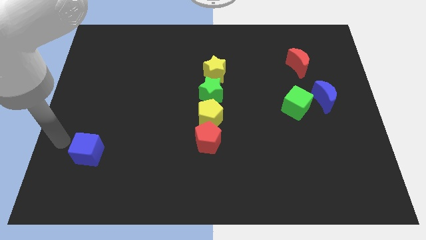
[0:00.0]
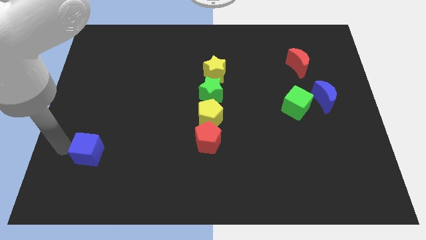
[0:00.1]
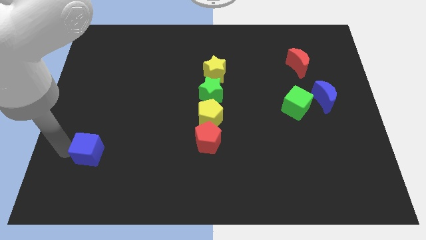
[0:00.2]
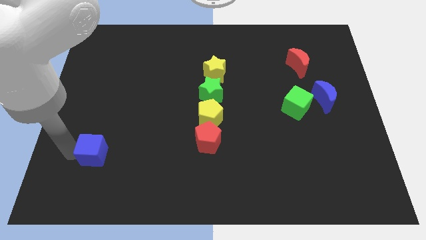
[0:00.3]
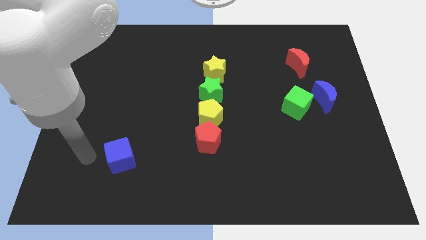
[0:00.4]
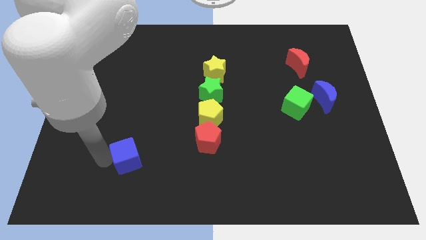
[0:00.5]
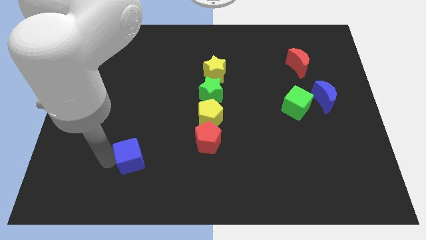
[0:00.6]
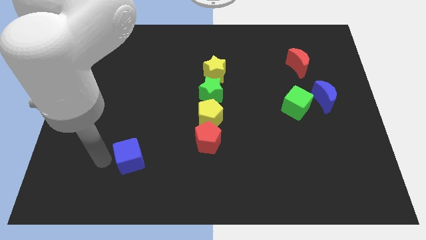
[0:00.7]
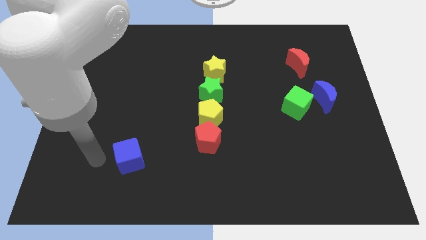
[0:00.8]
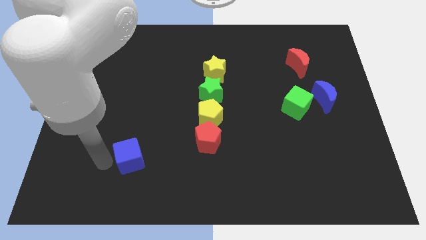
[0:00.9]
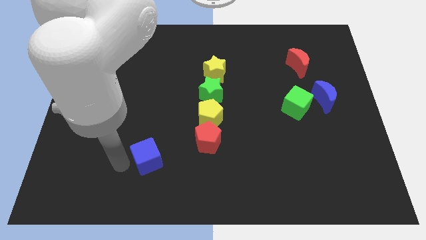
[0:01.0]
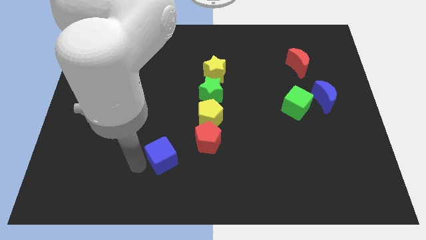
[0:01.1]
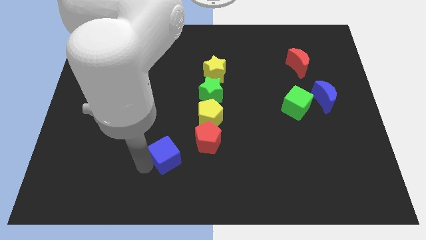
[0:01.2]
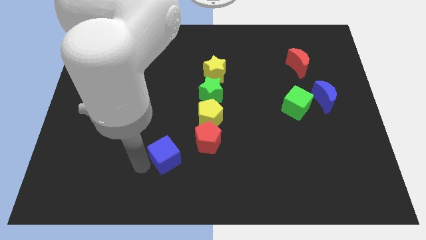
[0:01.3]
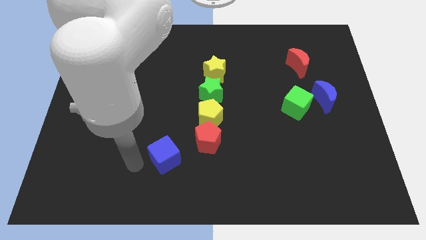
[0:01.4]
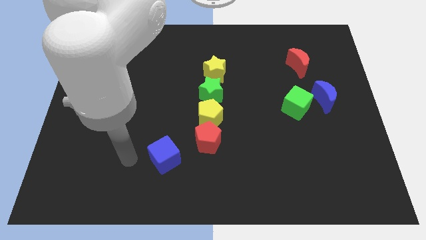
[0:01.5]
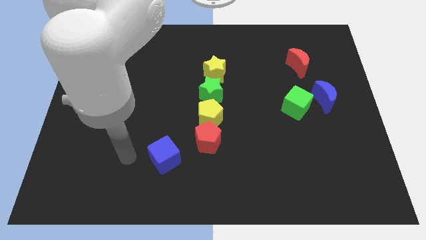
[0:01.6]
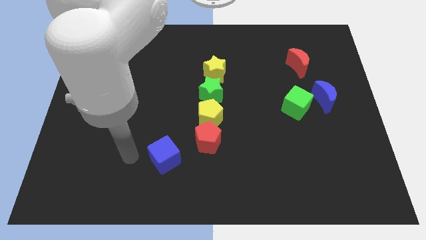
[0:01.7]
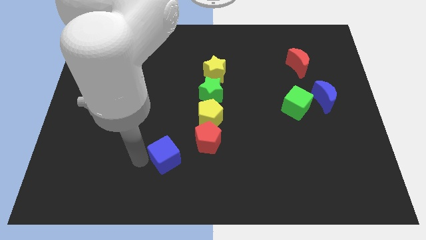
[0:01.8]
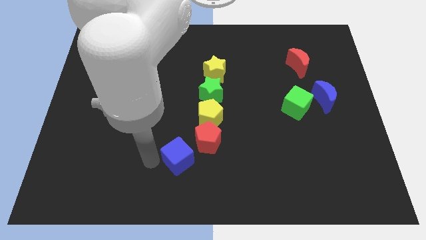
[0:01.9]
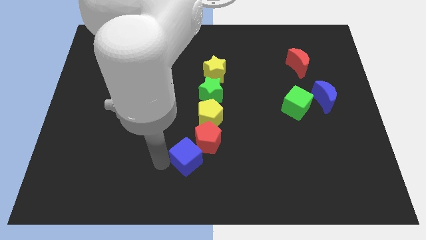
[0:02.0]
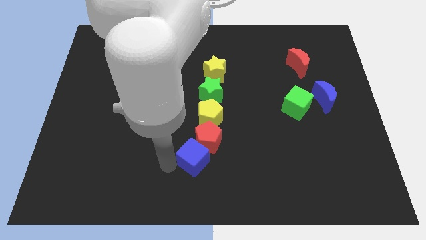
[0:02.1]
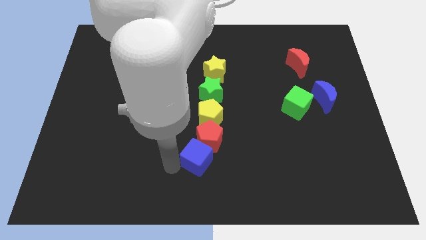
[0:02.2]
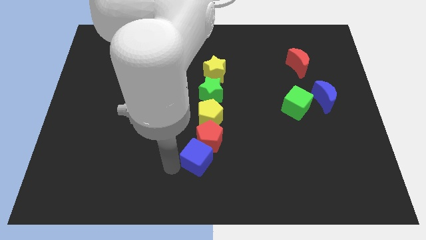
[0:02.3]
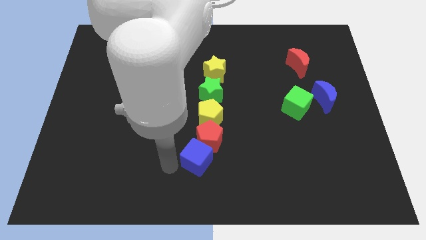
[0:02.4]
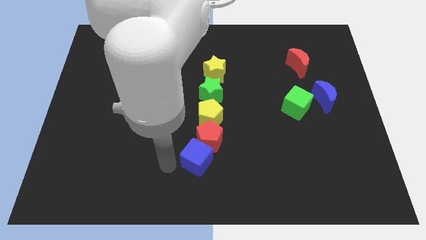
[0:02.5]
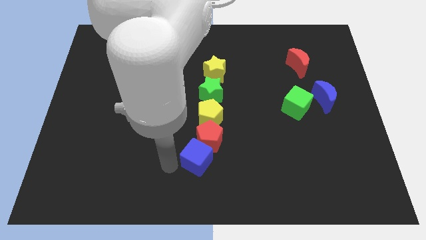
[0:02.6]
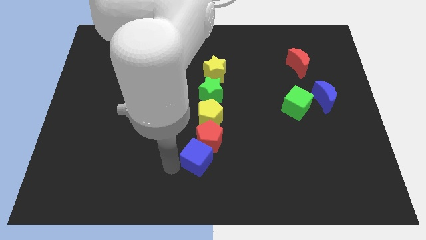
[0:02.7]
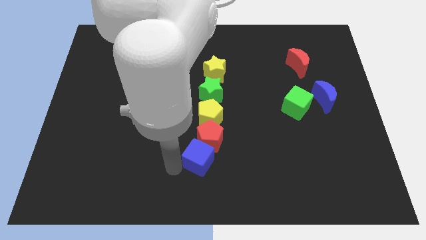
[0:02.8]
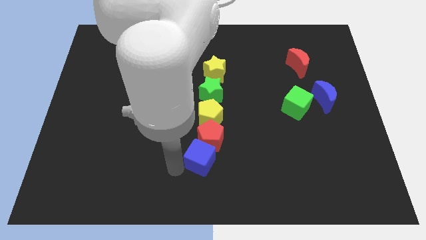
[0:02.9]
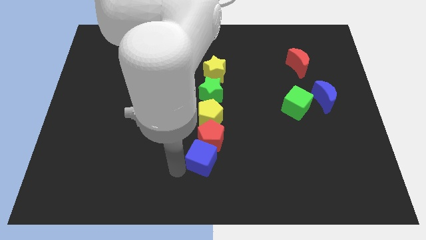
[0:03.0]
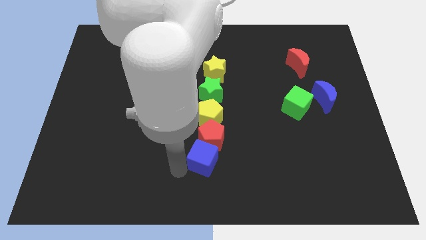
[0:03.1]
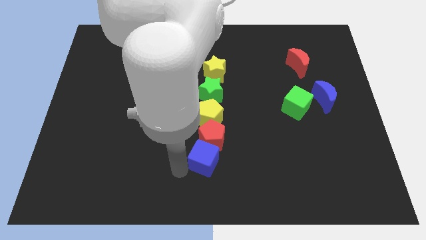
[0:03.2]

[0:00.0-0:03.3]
push blue cube below red pentagon

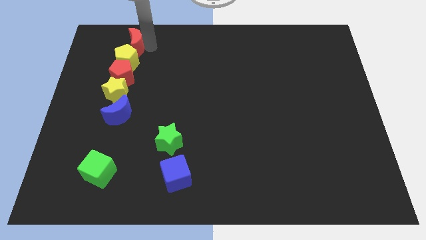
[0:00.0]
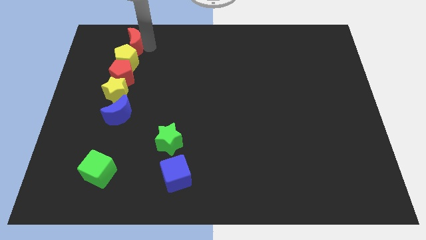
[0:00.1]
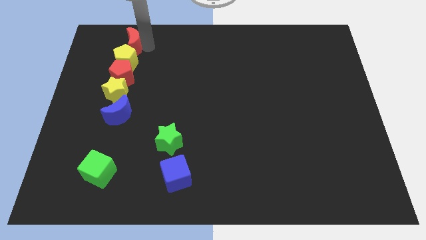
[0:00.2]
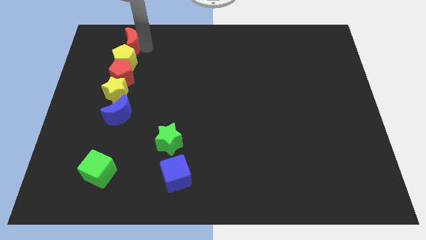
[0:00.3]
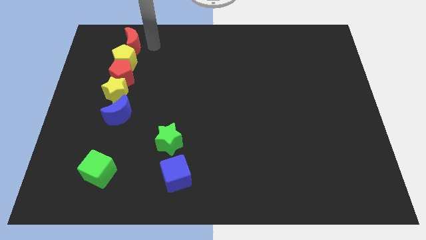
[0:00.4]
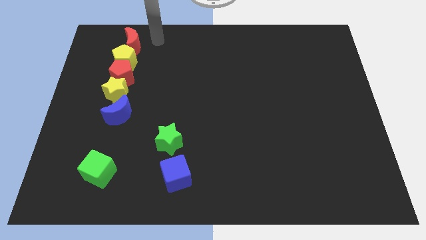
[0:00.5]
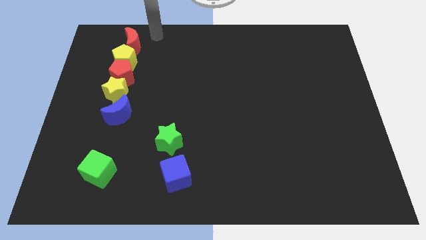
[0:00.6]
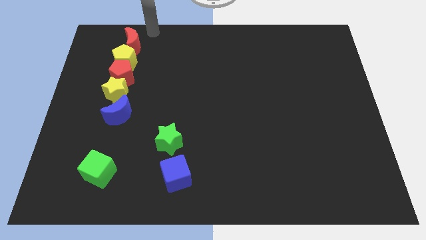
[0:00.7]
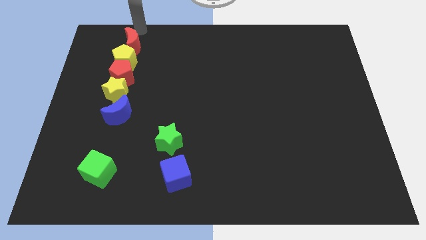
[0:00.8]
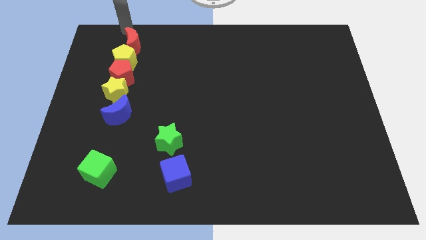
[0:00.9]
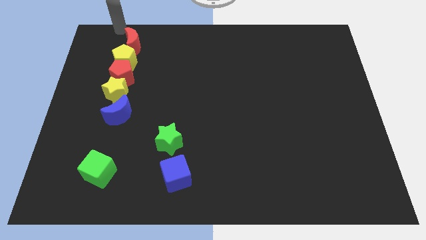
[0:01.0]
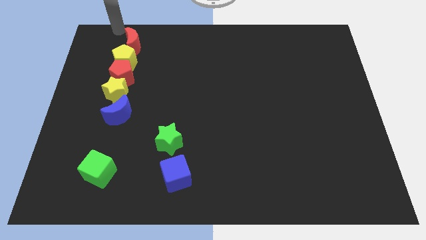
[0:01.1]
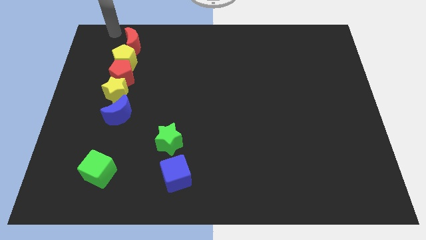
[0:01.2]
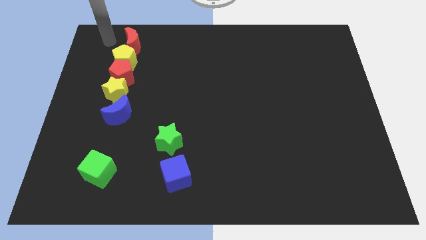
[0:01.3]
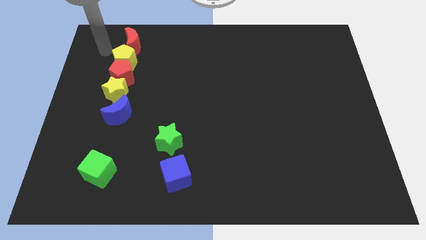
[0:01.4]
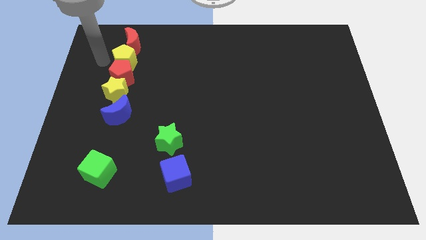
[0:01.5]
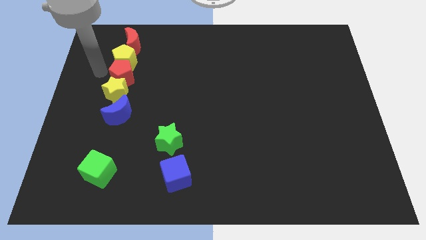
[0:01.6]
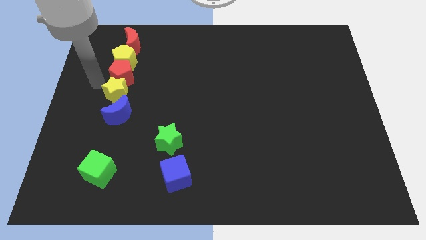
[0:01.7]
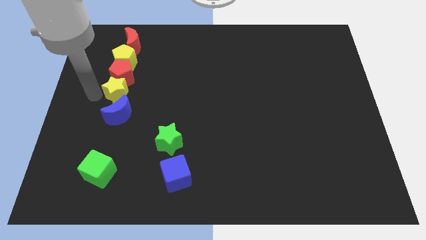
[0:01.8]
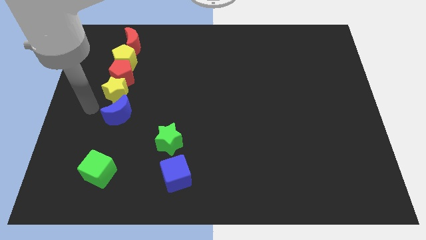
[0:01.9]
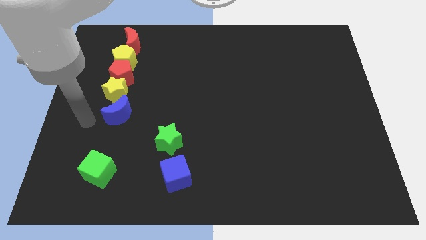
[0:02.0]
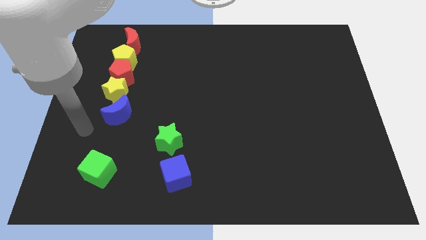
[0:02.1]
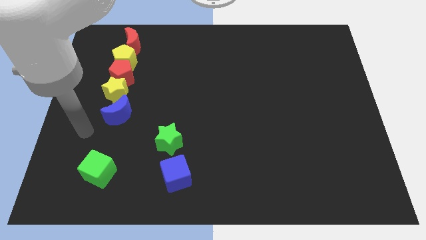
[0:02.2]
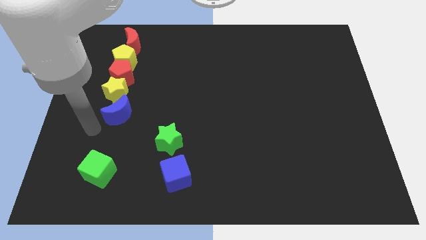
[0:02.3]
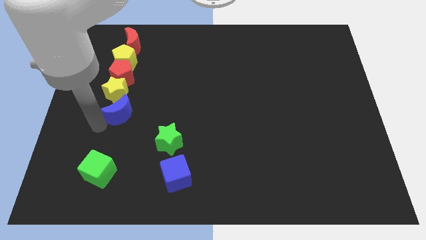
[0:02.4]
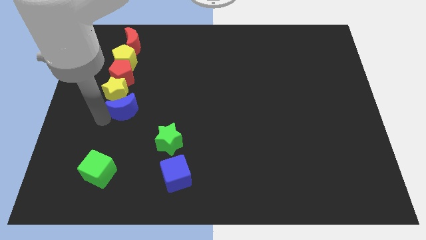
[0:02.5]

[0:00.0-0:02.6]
move your arm to the left of the blue crescent

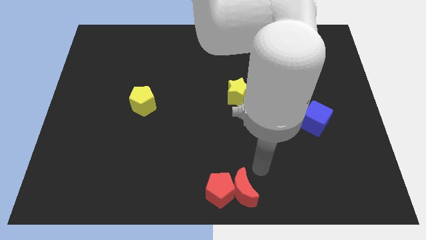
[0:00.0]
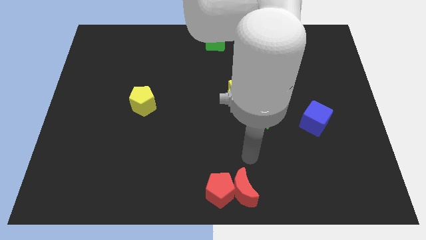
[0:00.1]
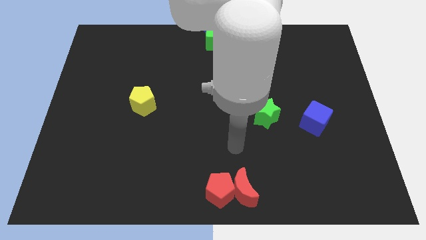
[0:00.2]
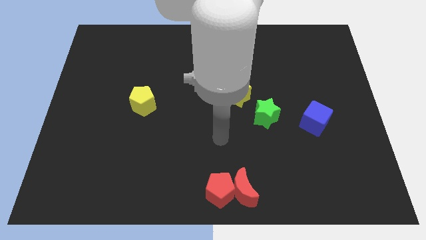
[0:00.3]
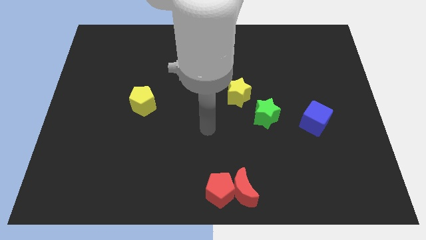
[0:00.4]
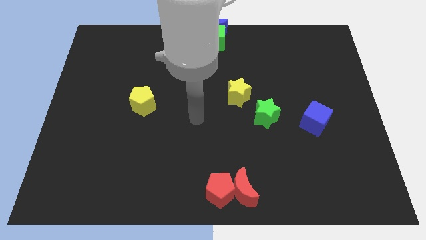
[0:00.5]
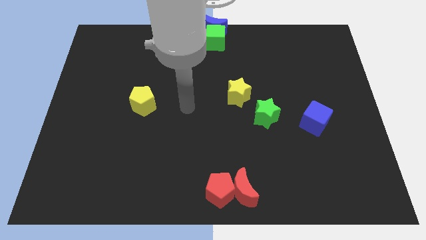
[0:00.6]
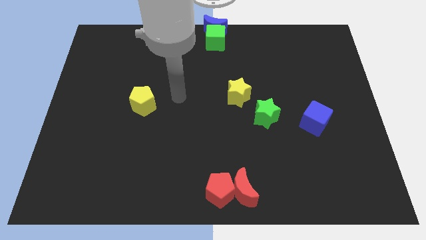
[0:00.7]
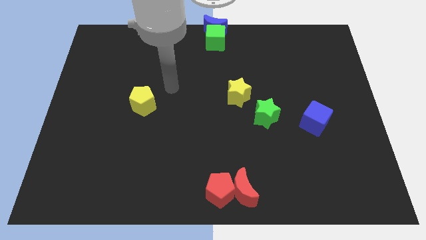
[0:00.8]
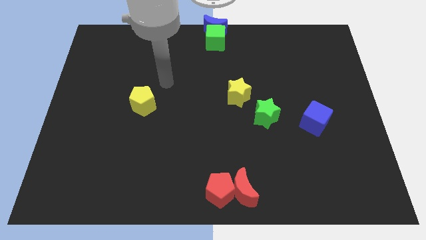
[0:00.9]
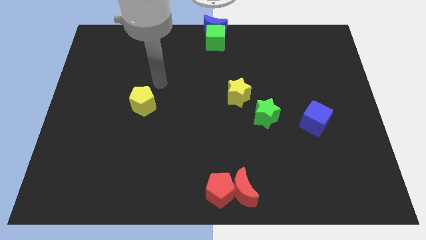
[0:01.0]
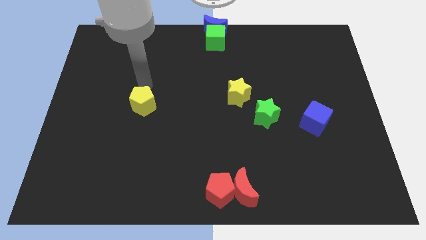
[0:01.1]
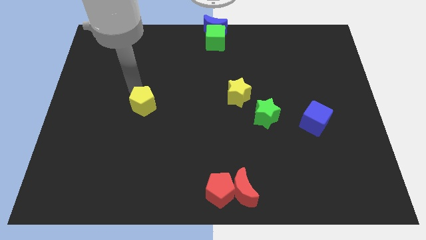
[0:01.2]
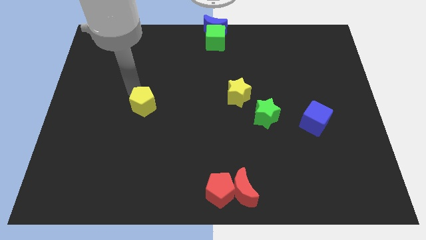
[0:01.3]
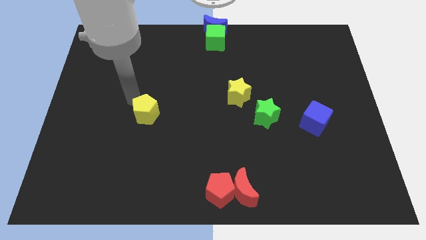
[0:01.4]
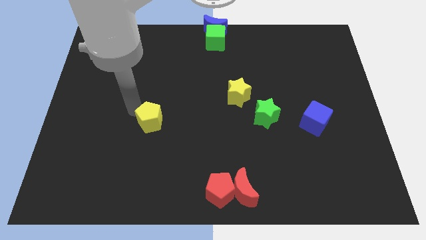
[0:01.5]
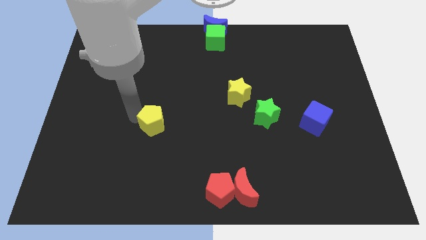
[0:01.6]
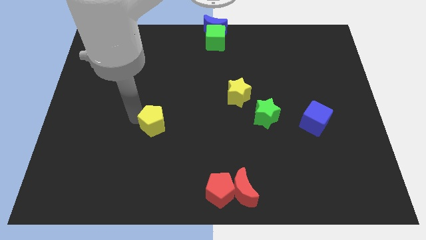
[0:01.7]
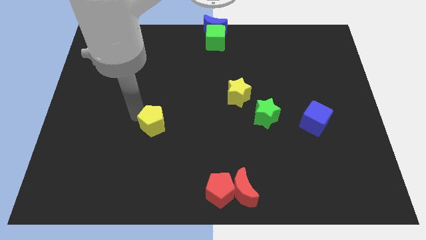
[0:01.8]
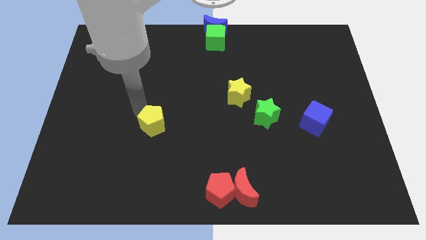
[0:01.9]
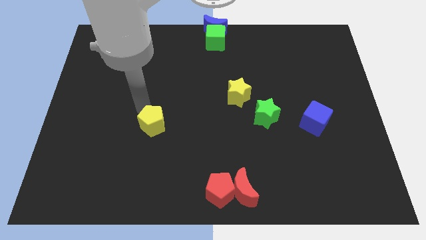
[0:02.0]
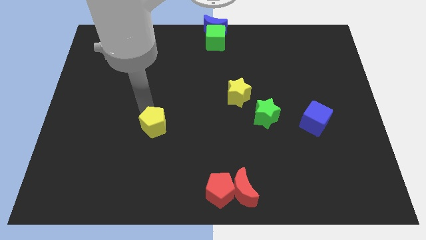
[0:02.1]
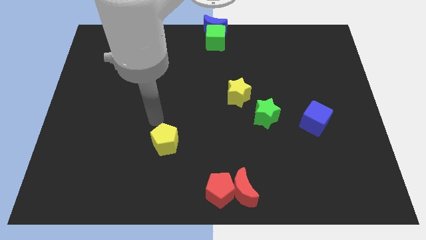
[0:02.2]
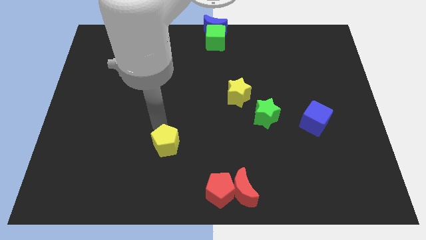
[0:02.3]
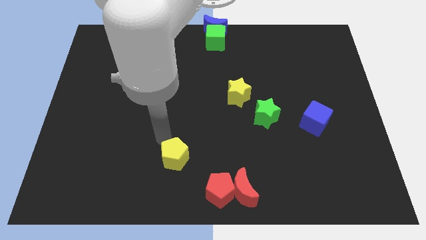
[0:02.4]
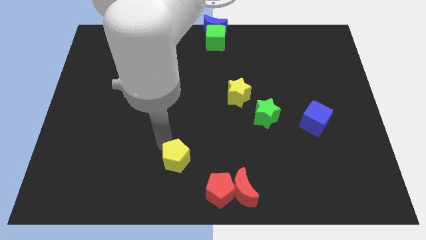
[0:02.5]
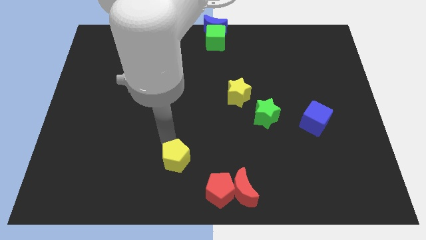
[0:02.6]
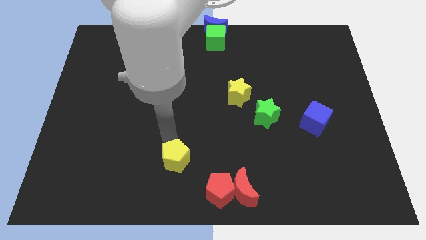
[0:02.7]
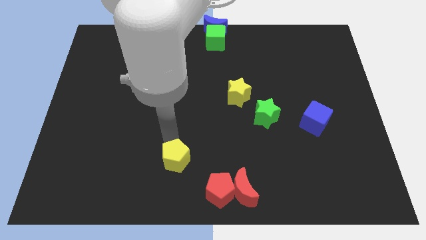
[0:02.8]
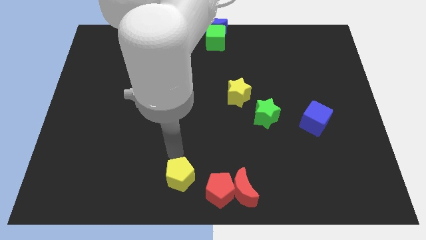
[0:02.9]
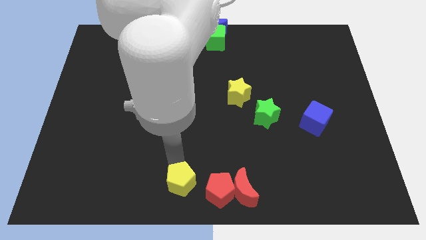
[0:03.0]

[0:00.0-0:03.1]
slide yellow pentagon towards red pentagon
